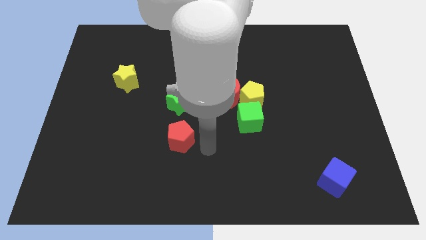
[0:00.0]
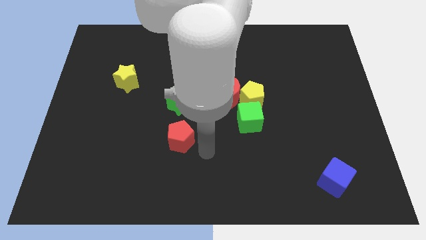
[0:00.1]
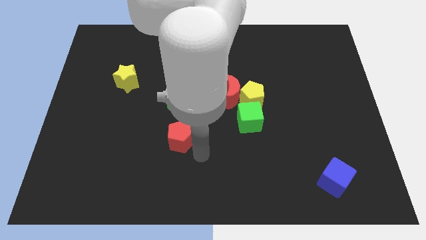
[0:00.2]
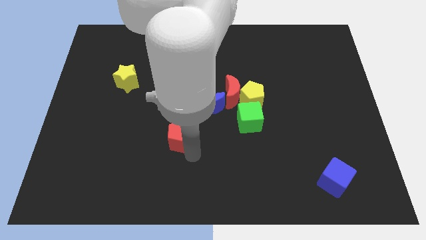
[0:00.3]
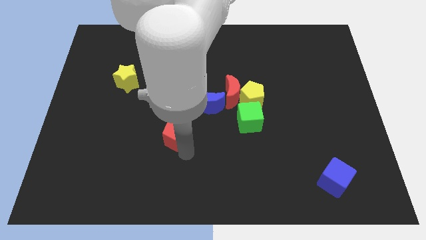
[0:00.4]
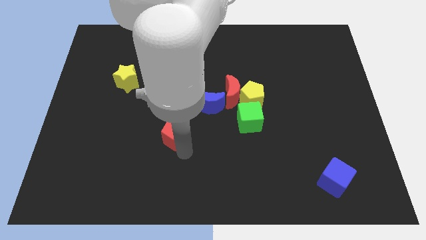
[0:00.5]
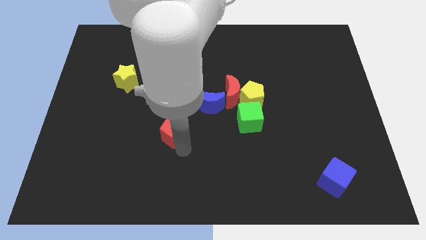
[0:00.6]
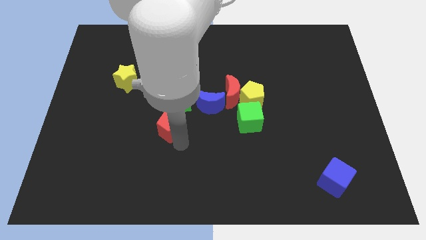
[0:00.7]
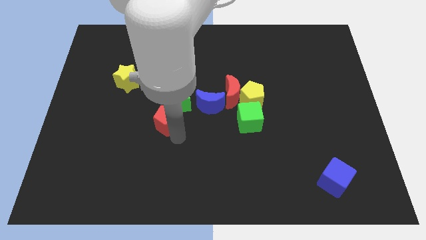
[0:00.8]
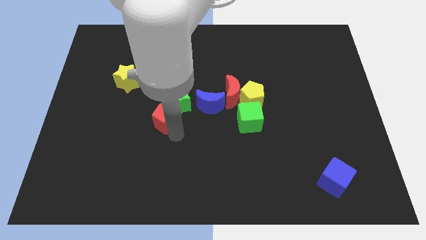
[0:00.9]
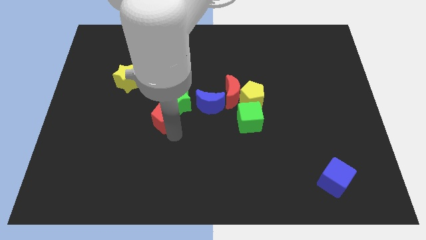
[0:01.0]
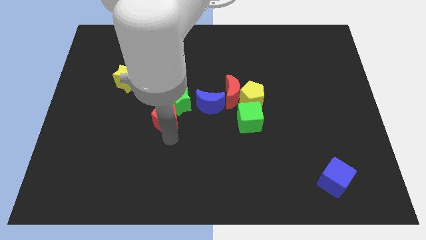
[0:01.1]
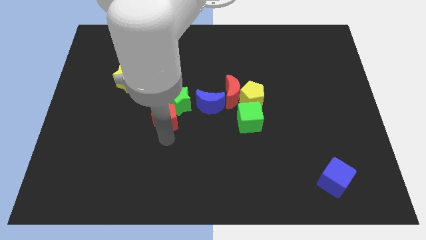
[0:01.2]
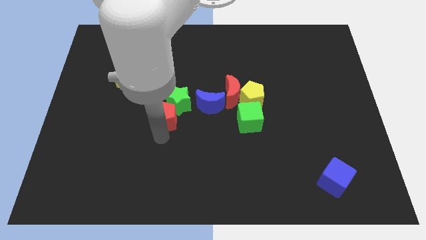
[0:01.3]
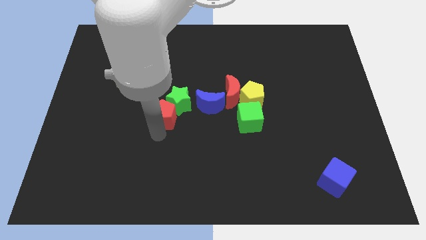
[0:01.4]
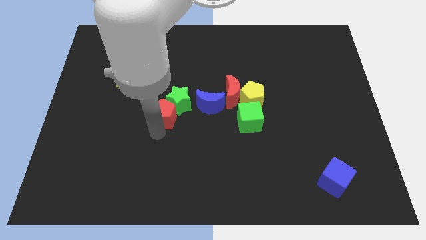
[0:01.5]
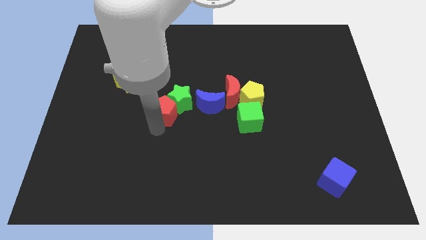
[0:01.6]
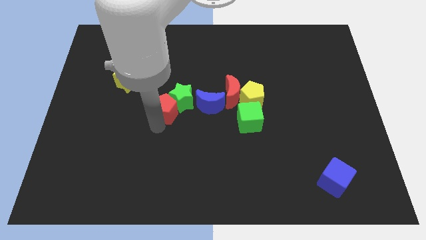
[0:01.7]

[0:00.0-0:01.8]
move the red pentagon to the bottom left of the green star

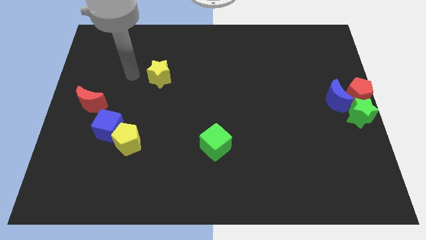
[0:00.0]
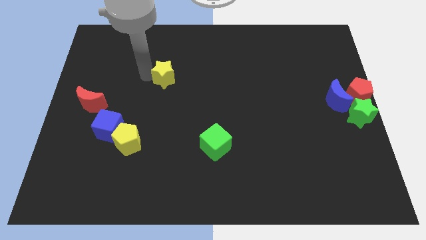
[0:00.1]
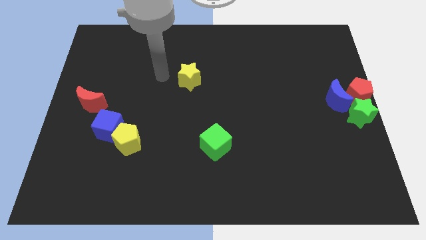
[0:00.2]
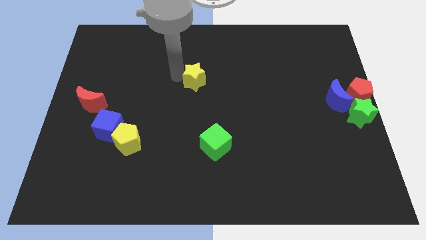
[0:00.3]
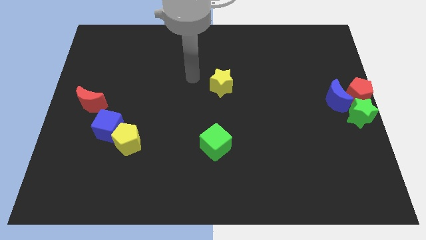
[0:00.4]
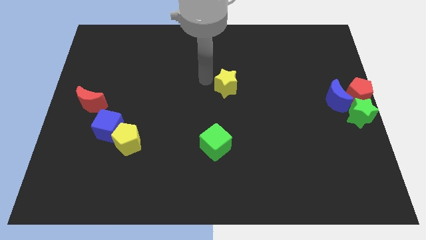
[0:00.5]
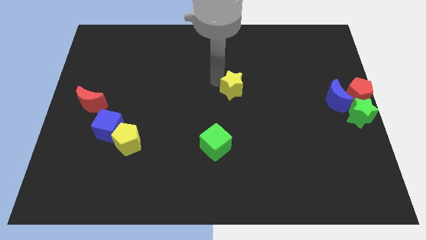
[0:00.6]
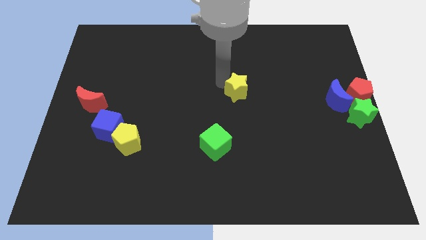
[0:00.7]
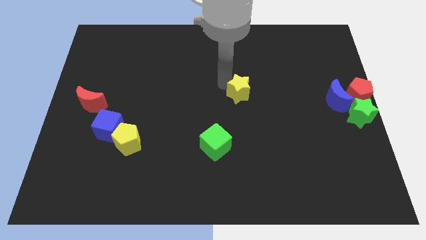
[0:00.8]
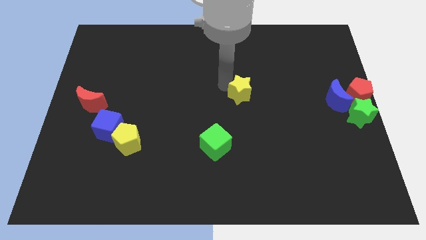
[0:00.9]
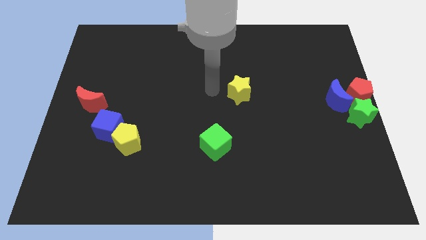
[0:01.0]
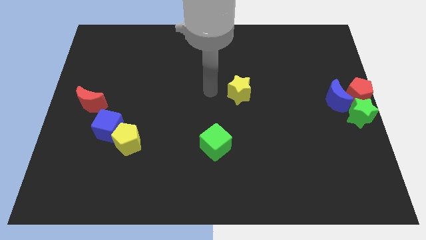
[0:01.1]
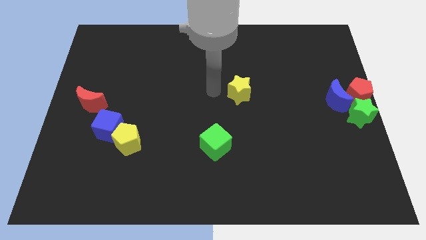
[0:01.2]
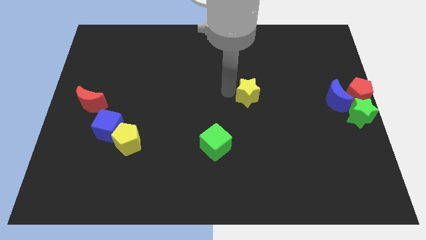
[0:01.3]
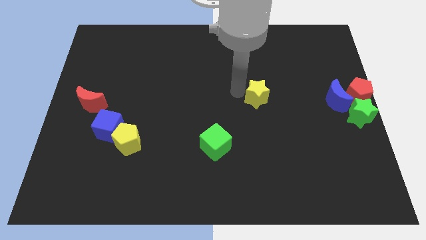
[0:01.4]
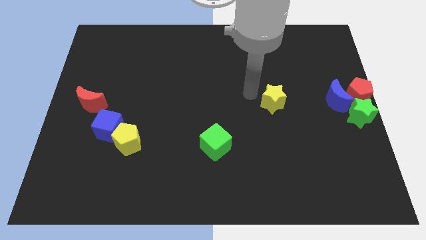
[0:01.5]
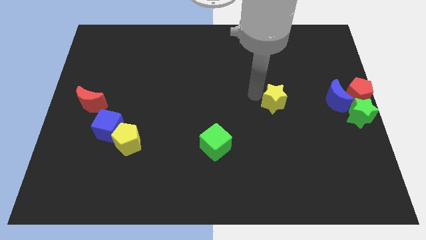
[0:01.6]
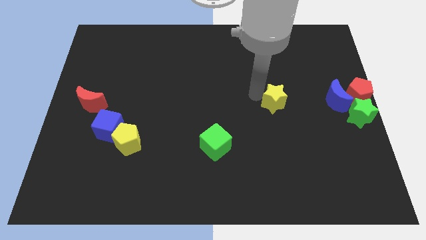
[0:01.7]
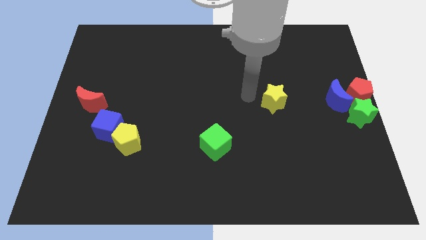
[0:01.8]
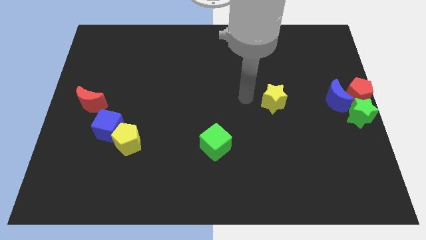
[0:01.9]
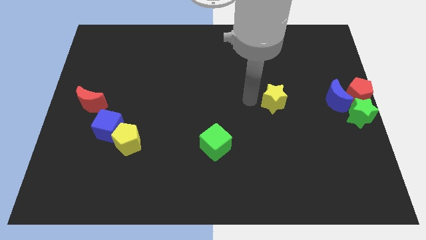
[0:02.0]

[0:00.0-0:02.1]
push the yellow star to the top right of the green cube

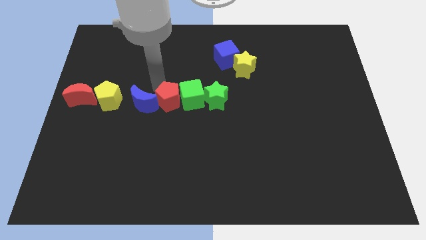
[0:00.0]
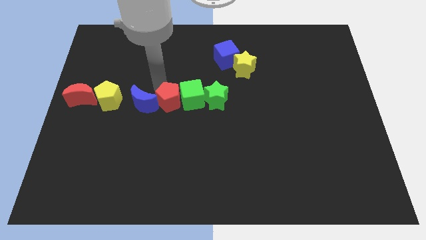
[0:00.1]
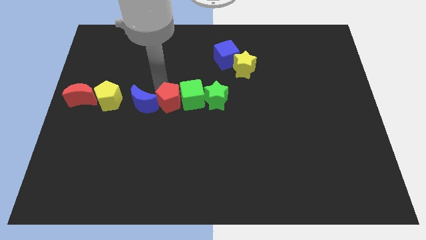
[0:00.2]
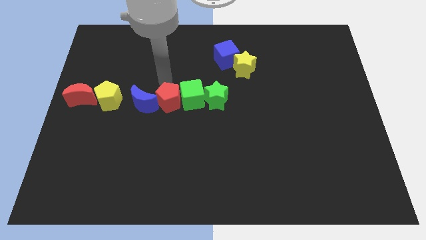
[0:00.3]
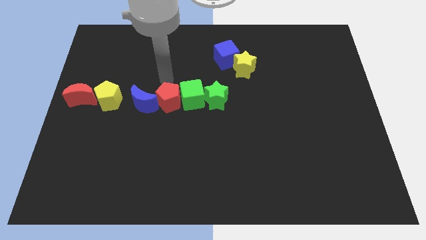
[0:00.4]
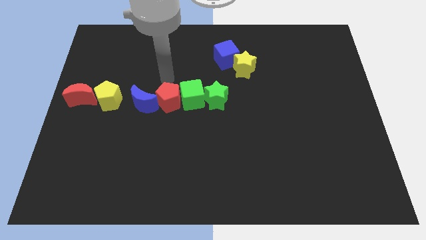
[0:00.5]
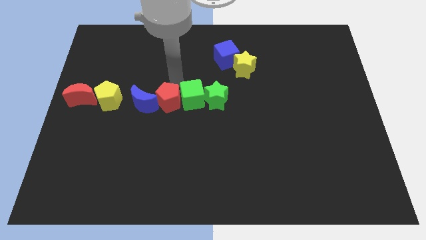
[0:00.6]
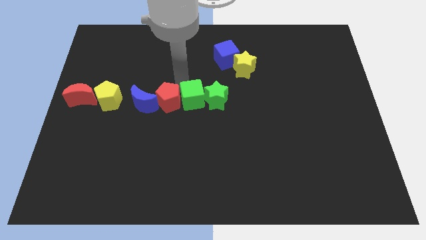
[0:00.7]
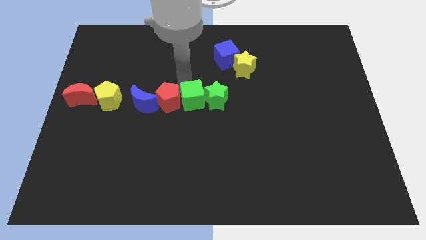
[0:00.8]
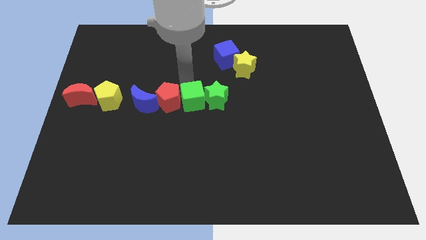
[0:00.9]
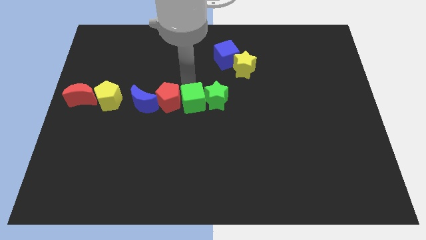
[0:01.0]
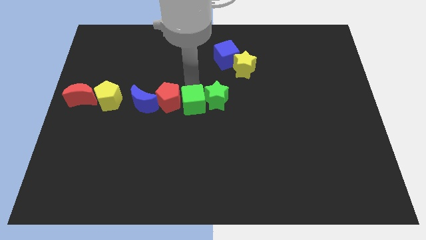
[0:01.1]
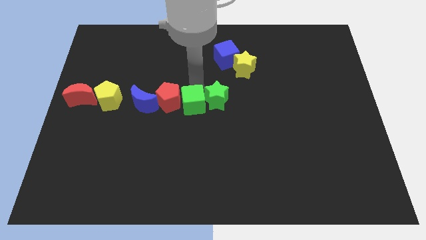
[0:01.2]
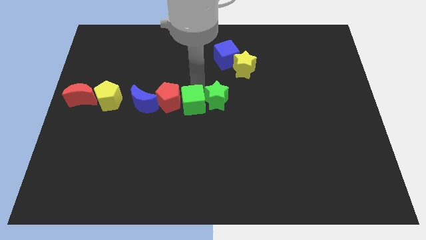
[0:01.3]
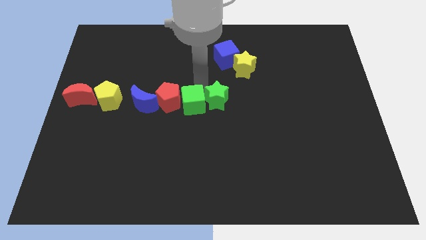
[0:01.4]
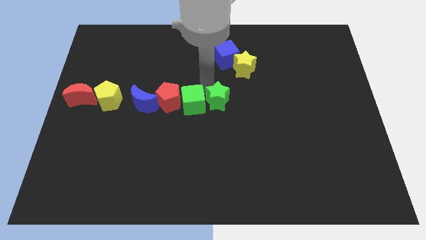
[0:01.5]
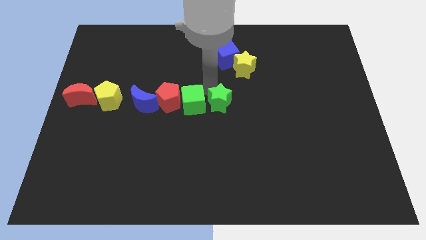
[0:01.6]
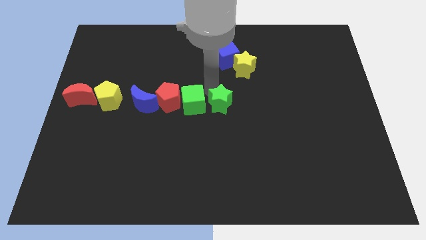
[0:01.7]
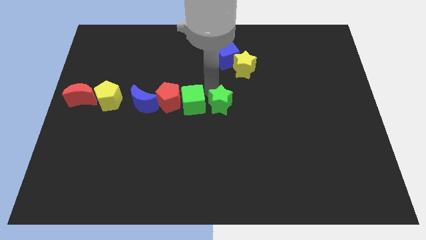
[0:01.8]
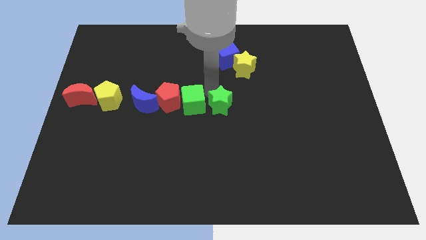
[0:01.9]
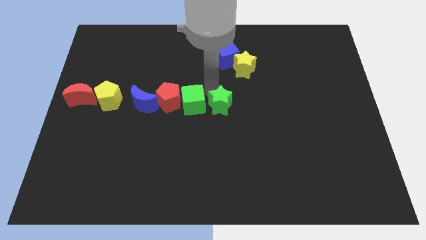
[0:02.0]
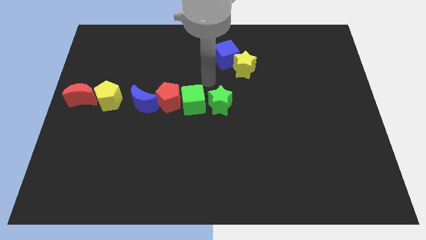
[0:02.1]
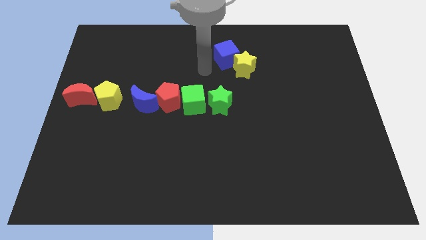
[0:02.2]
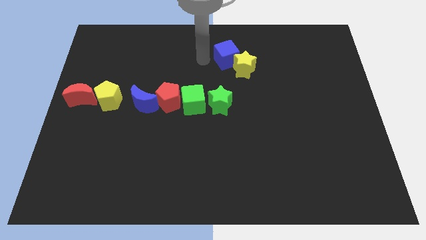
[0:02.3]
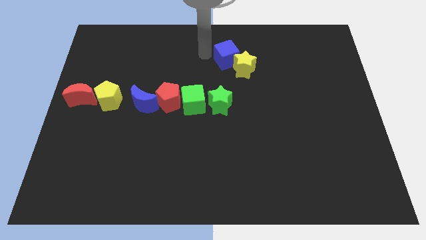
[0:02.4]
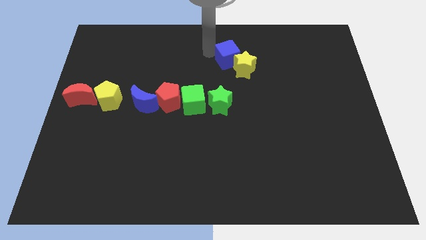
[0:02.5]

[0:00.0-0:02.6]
adjust the green cube and green star to the right of the horizontal line of blocks

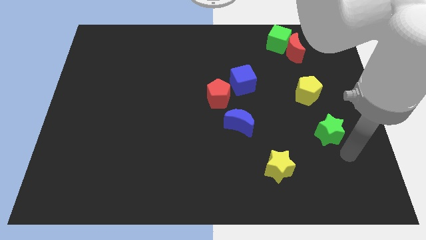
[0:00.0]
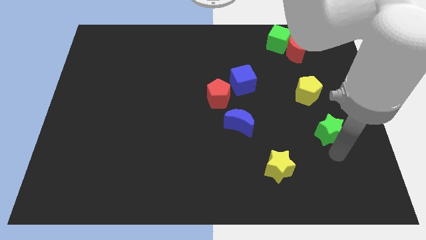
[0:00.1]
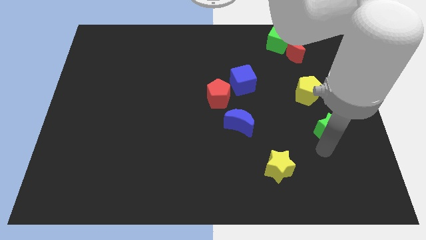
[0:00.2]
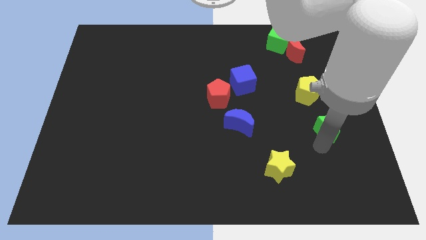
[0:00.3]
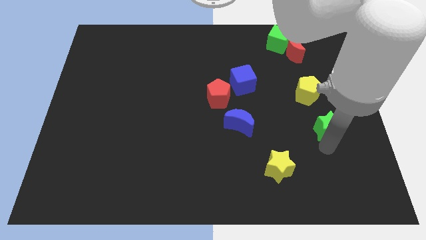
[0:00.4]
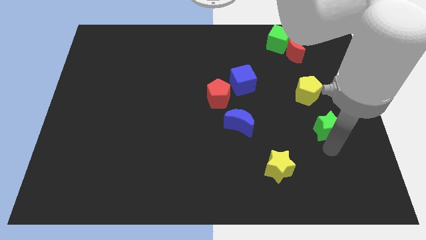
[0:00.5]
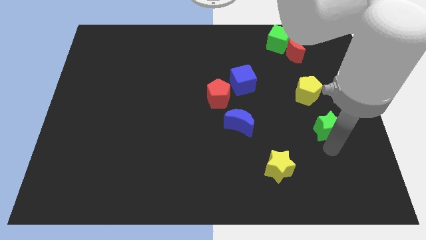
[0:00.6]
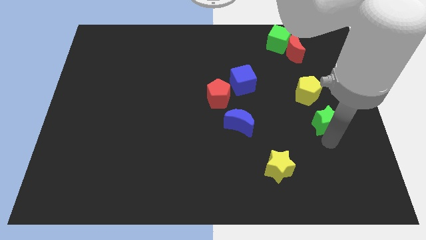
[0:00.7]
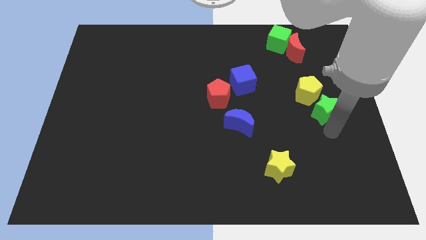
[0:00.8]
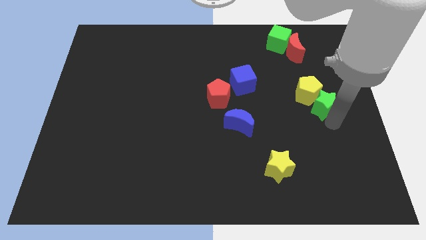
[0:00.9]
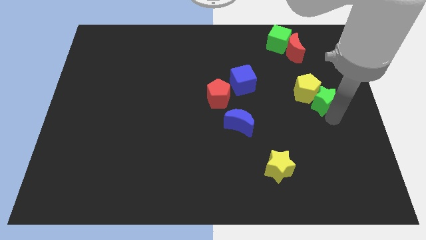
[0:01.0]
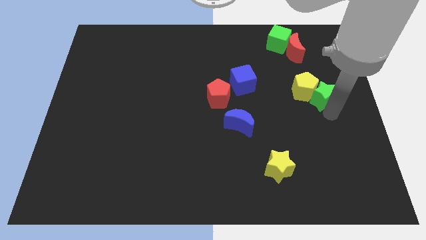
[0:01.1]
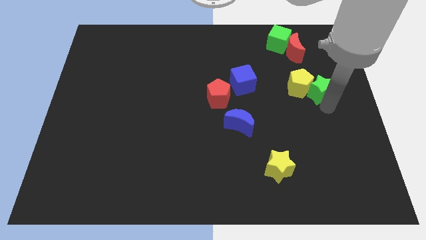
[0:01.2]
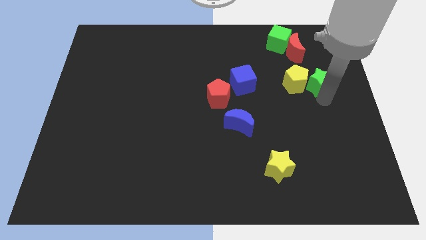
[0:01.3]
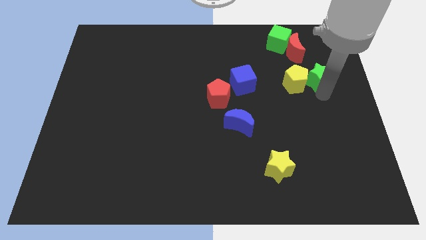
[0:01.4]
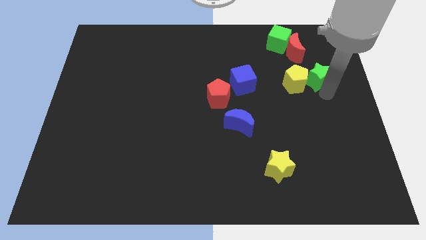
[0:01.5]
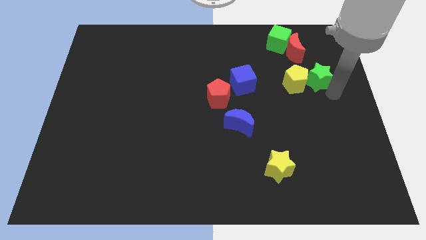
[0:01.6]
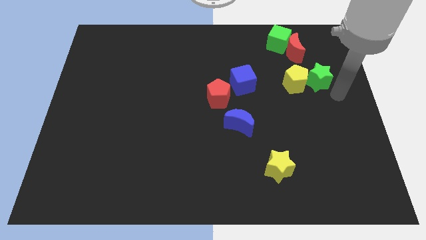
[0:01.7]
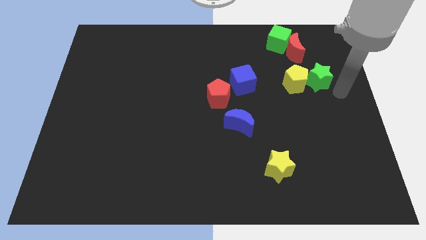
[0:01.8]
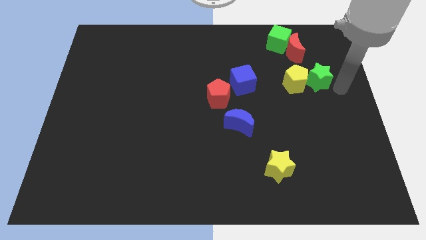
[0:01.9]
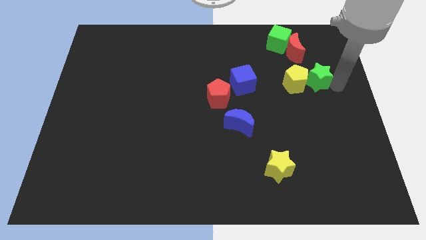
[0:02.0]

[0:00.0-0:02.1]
place green star to the right of yellow pentagon

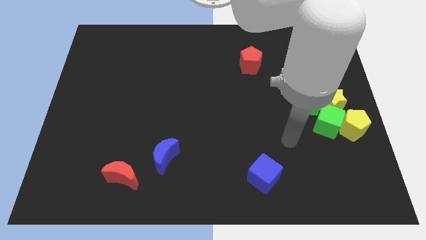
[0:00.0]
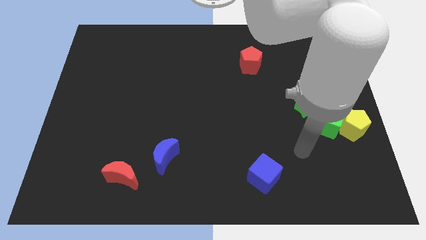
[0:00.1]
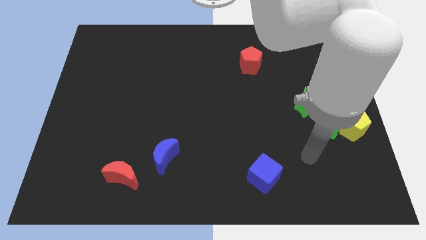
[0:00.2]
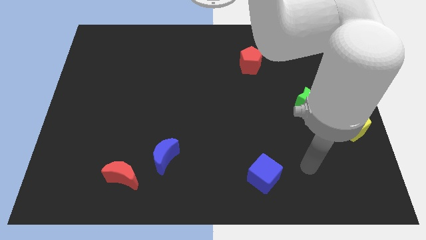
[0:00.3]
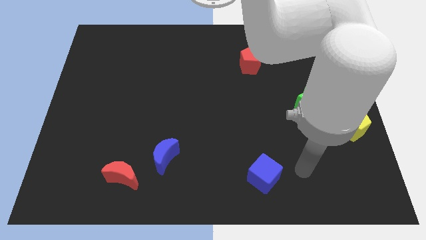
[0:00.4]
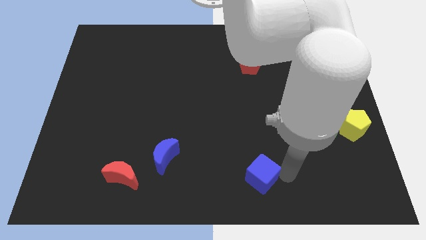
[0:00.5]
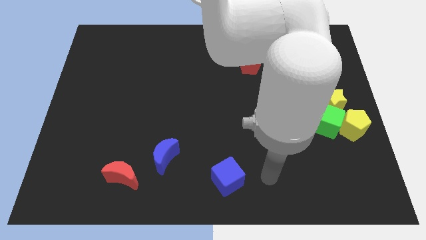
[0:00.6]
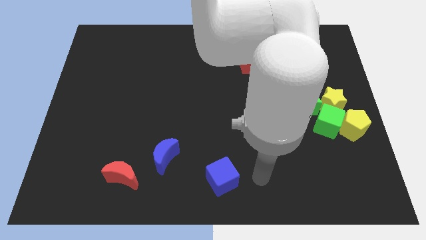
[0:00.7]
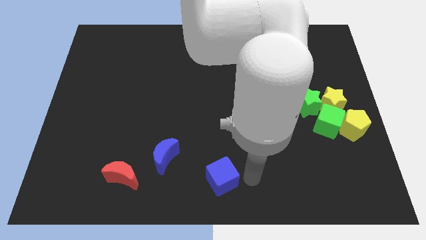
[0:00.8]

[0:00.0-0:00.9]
place the blue cube at the bottom center of the board
